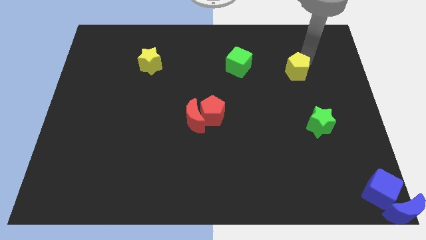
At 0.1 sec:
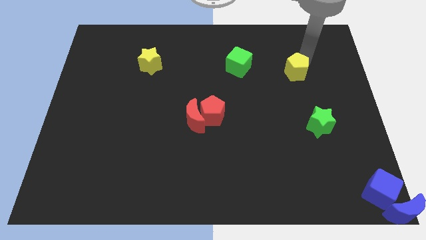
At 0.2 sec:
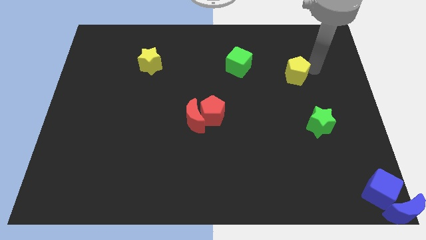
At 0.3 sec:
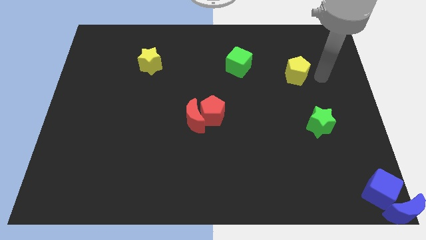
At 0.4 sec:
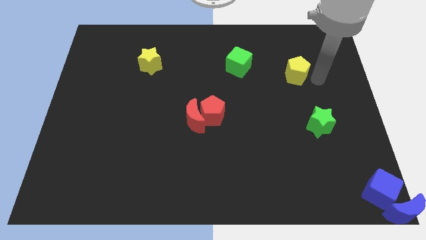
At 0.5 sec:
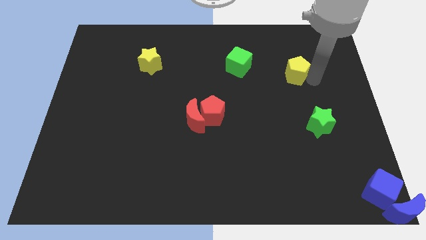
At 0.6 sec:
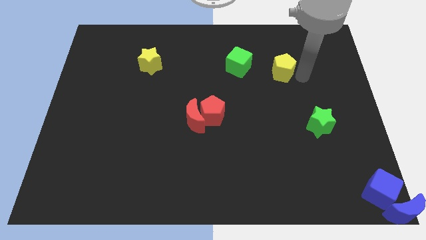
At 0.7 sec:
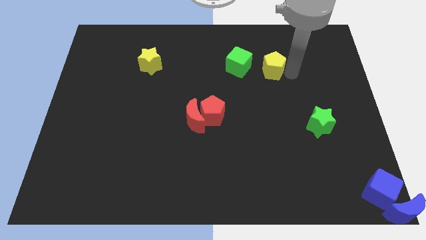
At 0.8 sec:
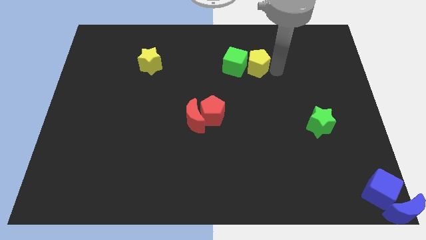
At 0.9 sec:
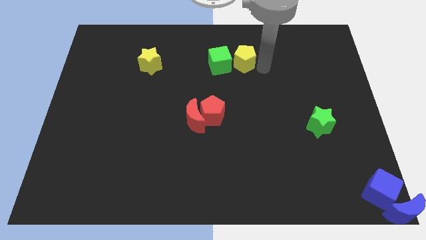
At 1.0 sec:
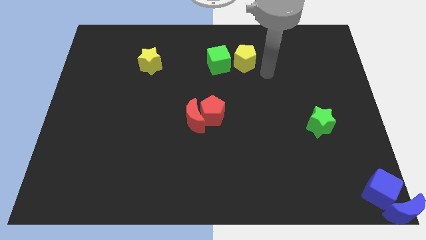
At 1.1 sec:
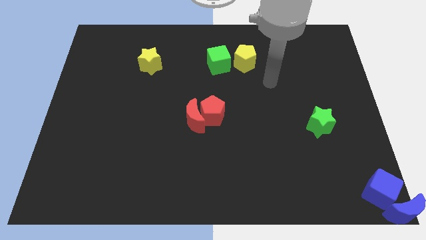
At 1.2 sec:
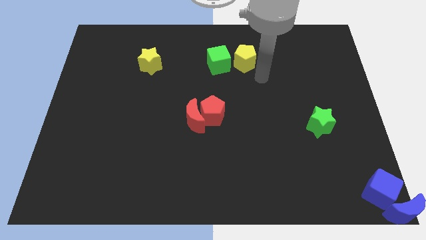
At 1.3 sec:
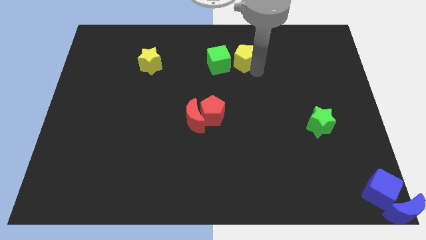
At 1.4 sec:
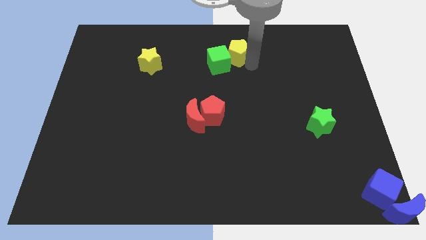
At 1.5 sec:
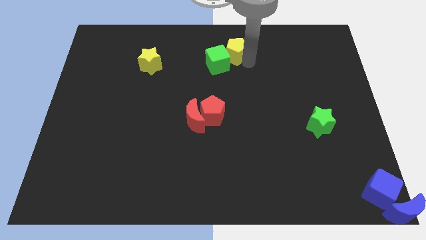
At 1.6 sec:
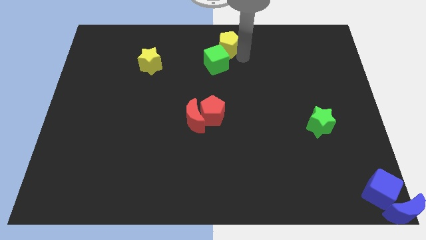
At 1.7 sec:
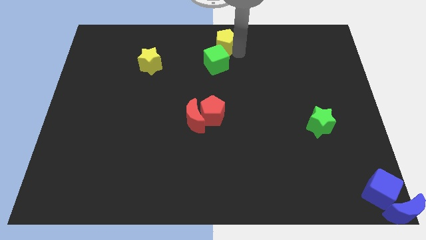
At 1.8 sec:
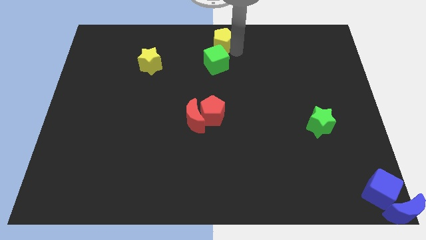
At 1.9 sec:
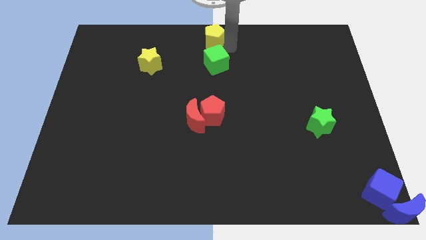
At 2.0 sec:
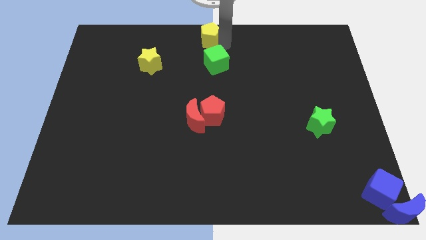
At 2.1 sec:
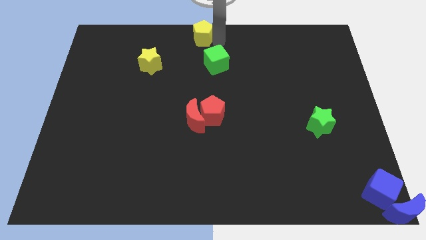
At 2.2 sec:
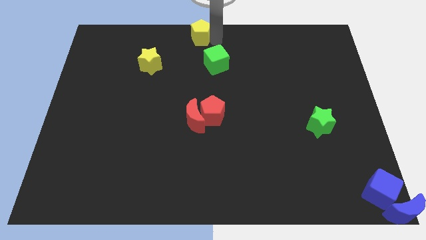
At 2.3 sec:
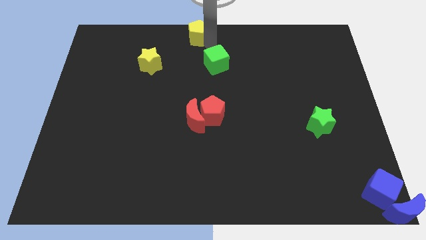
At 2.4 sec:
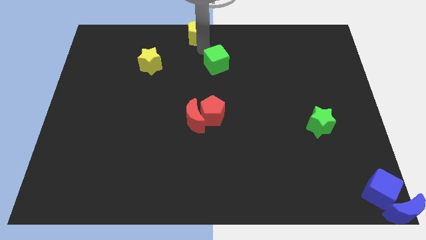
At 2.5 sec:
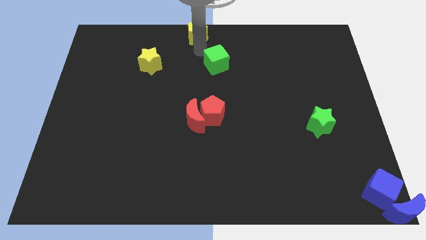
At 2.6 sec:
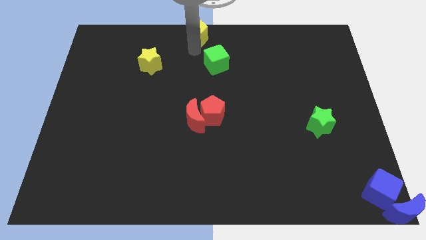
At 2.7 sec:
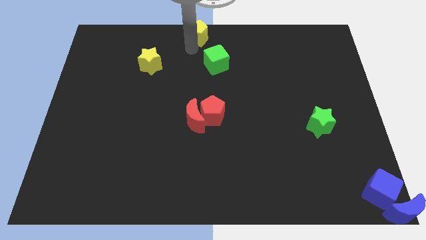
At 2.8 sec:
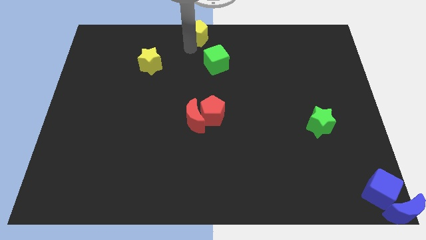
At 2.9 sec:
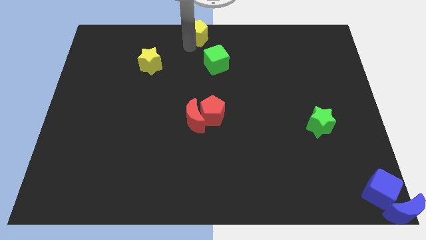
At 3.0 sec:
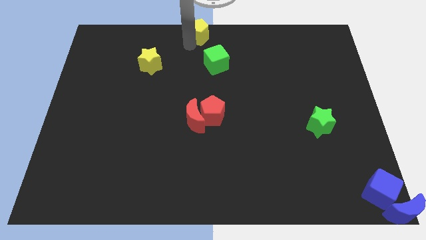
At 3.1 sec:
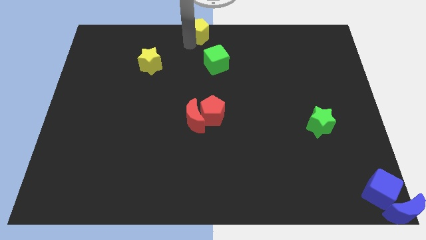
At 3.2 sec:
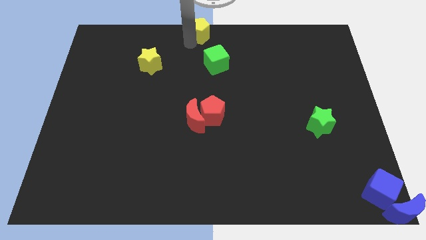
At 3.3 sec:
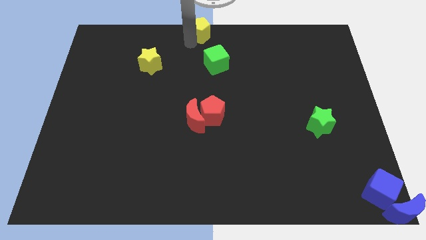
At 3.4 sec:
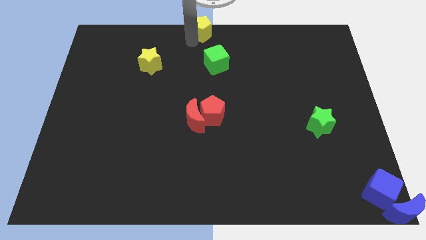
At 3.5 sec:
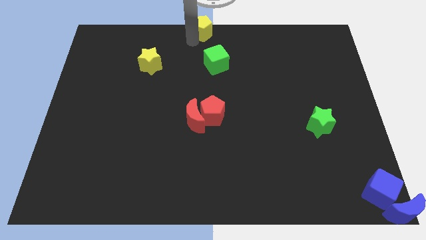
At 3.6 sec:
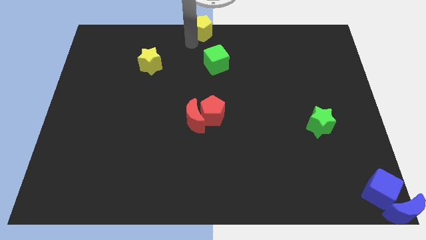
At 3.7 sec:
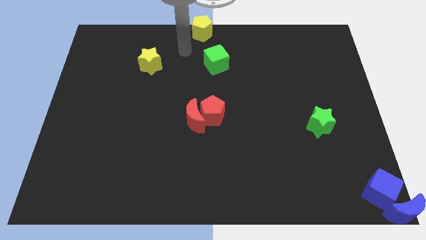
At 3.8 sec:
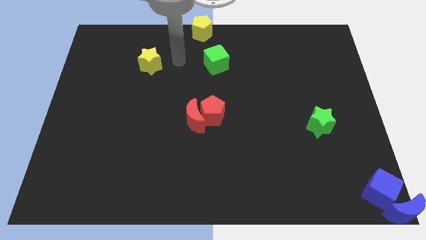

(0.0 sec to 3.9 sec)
move the yellow pentagon to the top middle of the board

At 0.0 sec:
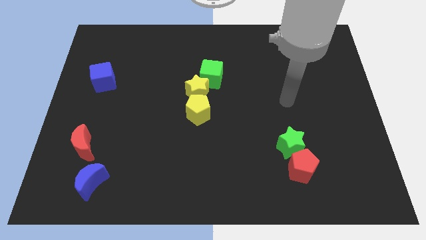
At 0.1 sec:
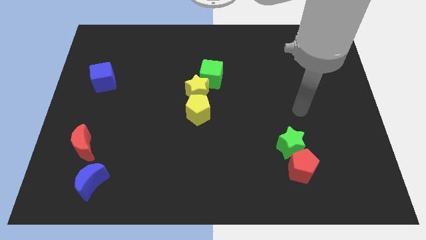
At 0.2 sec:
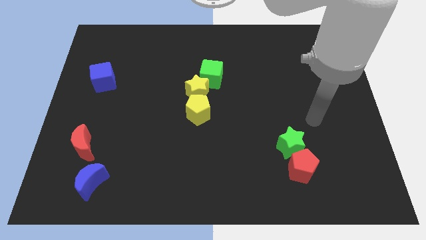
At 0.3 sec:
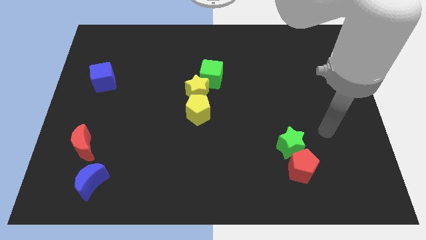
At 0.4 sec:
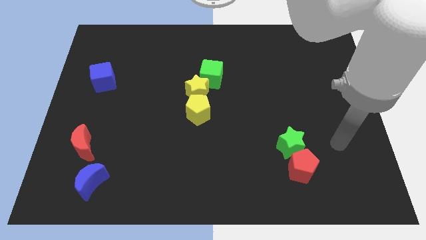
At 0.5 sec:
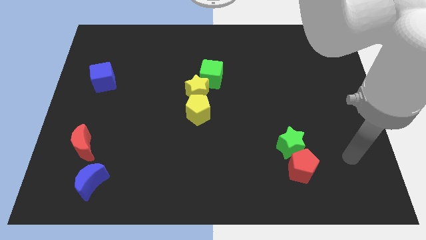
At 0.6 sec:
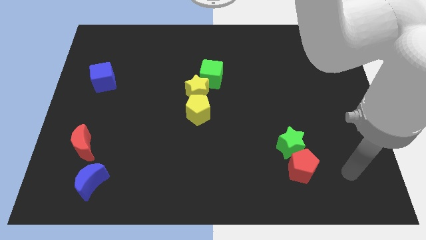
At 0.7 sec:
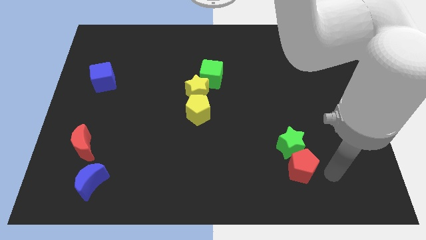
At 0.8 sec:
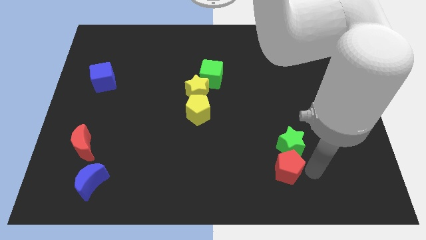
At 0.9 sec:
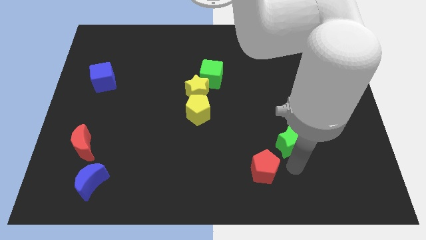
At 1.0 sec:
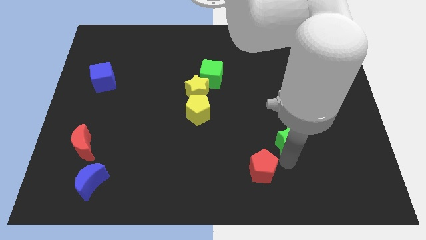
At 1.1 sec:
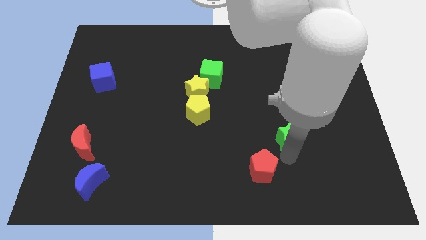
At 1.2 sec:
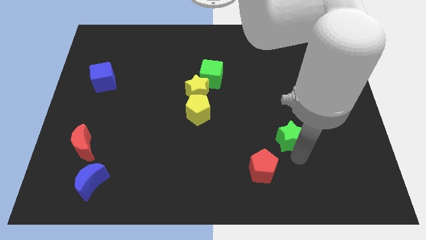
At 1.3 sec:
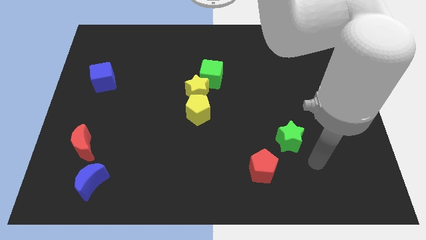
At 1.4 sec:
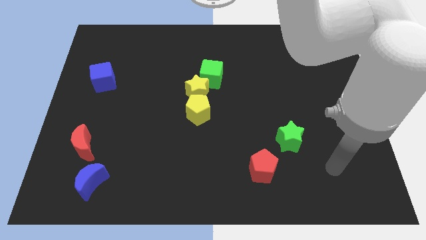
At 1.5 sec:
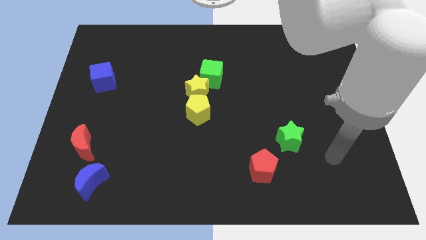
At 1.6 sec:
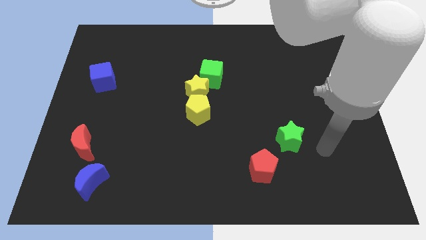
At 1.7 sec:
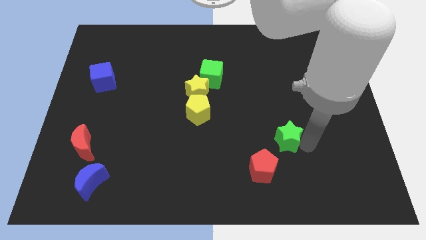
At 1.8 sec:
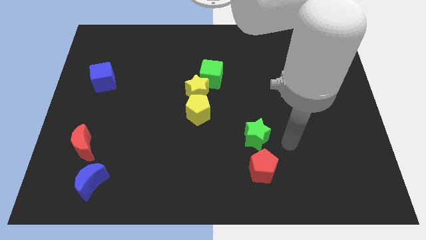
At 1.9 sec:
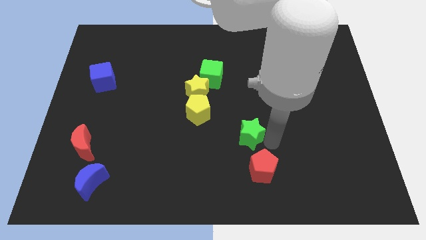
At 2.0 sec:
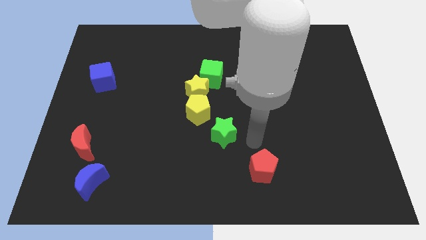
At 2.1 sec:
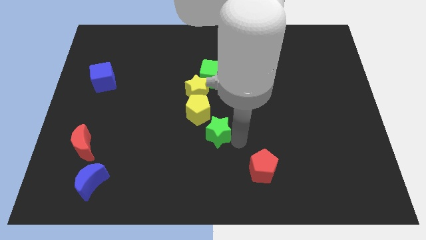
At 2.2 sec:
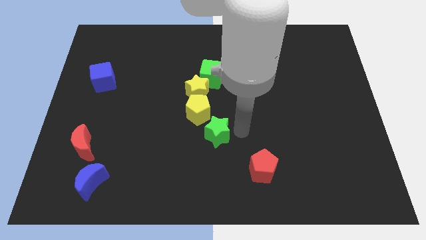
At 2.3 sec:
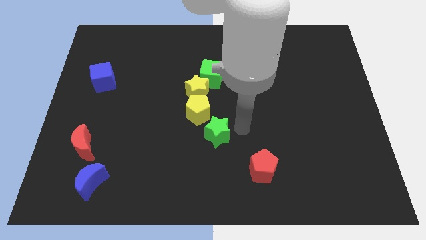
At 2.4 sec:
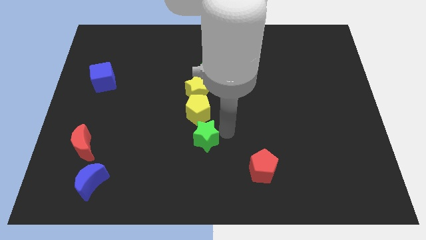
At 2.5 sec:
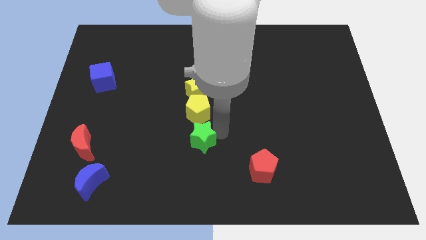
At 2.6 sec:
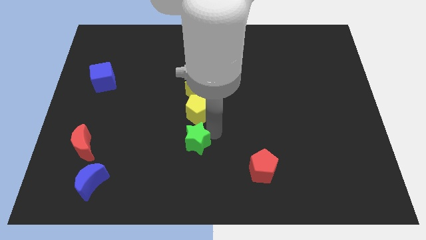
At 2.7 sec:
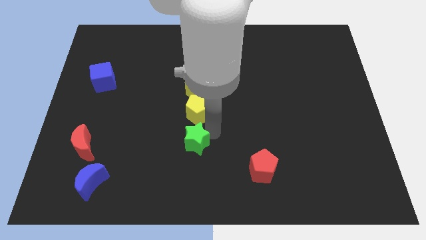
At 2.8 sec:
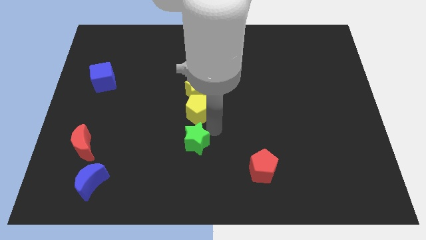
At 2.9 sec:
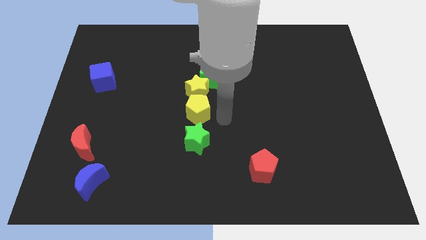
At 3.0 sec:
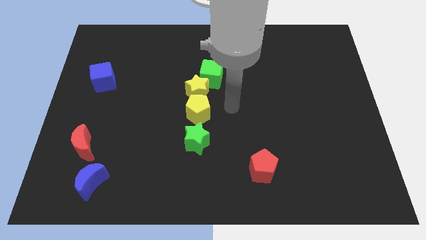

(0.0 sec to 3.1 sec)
place the green star to the bottom of the yellow pentagon

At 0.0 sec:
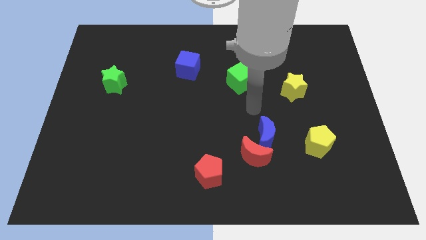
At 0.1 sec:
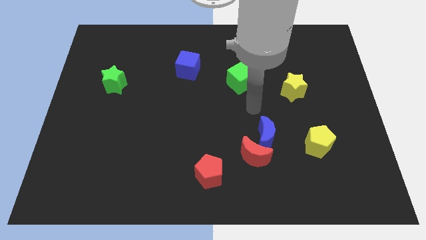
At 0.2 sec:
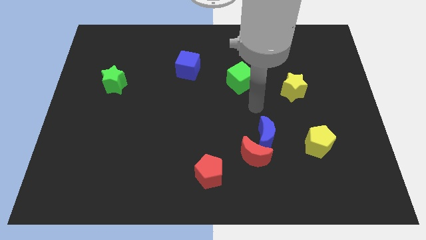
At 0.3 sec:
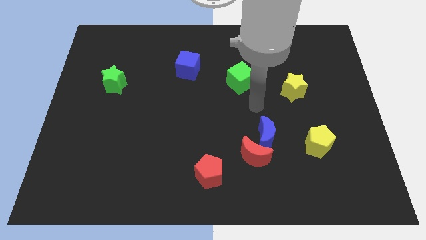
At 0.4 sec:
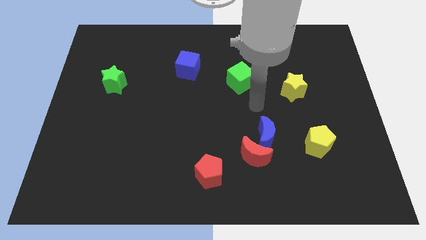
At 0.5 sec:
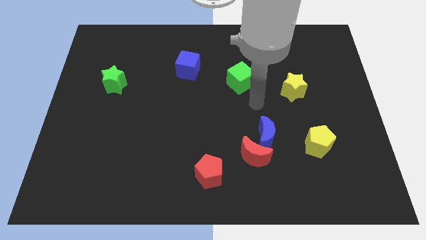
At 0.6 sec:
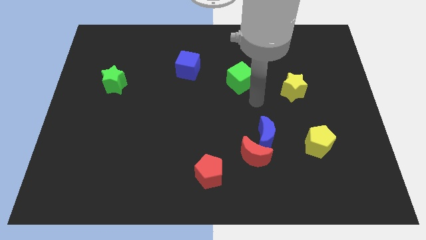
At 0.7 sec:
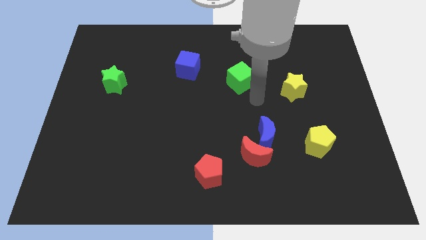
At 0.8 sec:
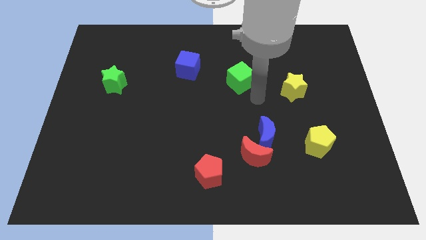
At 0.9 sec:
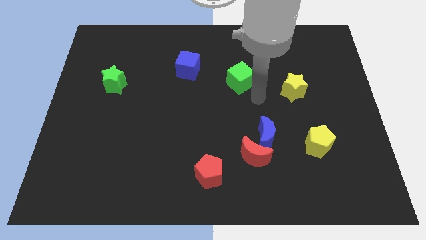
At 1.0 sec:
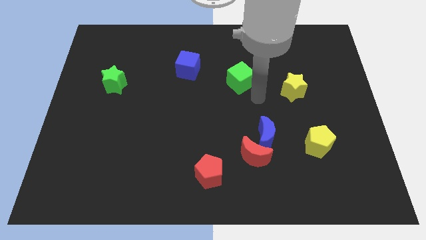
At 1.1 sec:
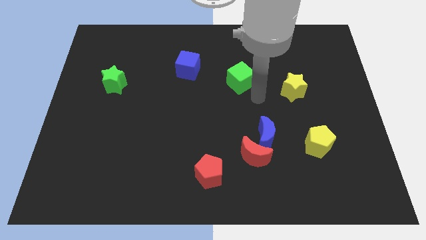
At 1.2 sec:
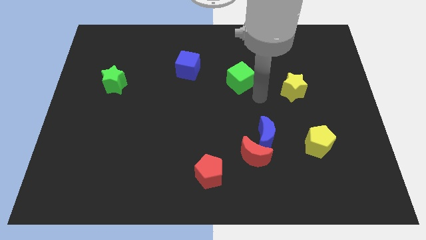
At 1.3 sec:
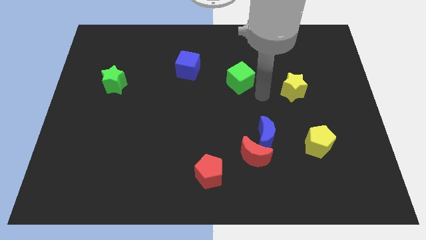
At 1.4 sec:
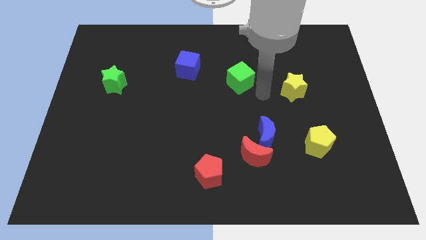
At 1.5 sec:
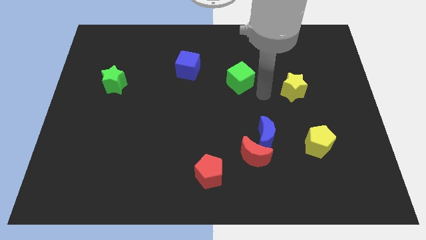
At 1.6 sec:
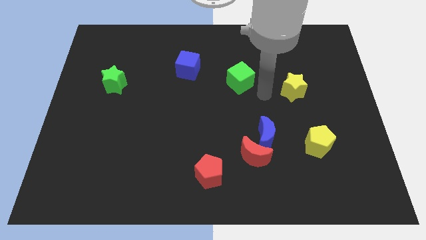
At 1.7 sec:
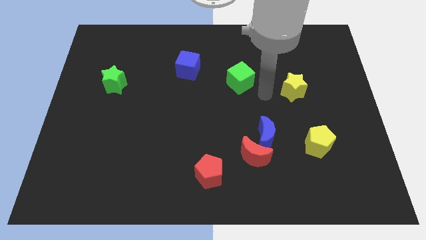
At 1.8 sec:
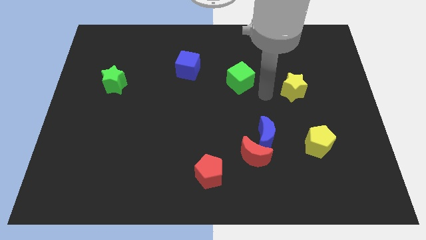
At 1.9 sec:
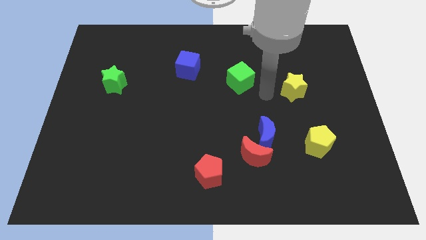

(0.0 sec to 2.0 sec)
push your arm in between the green cube and yellow star
